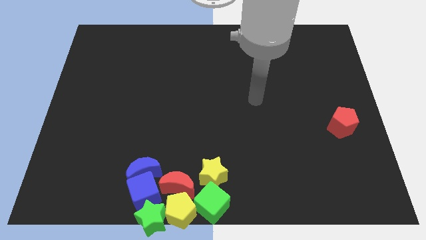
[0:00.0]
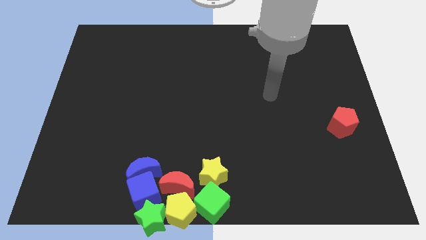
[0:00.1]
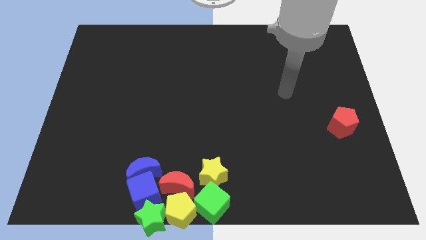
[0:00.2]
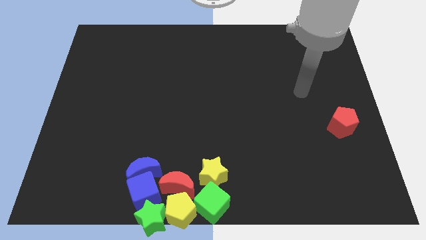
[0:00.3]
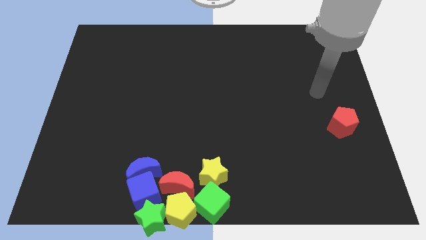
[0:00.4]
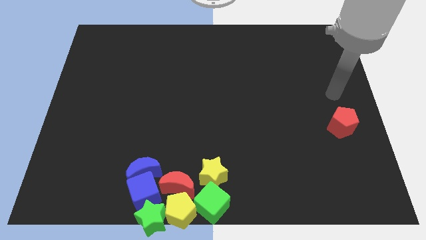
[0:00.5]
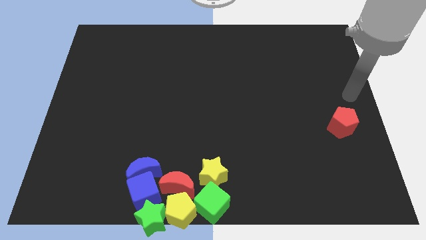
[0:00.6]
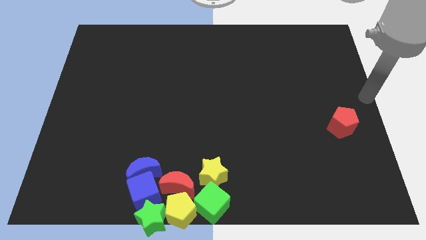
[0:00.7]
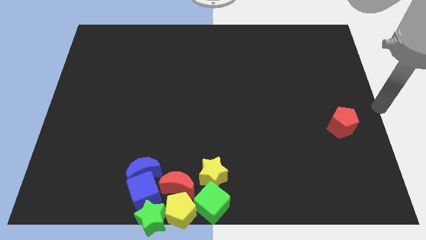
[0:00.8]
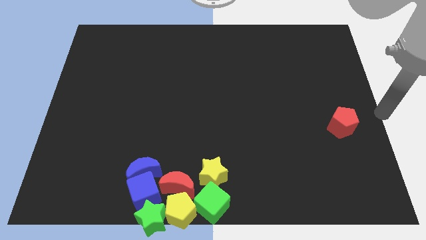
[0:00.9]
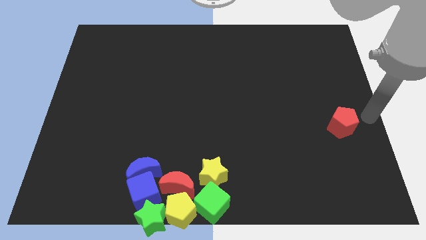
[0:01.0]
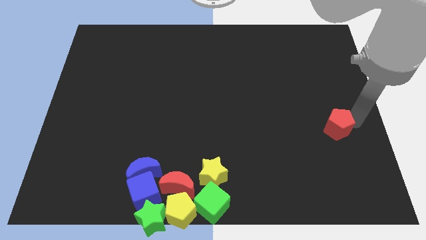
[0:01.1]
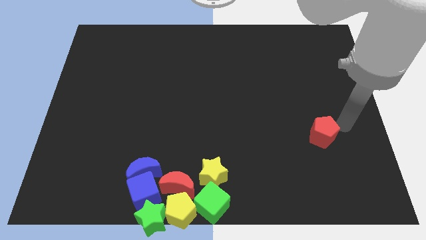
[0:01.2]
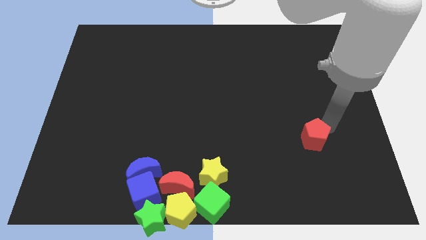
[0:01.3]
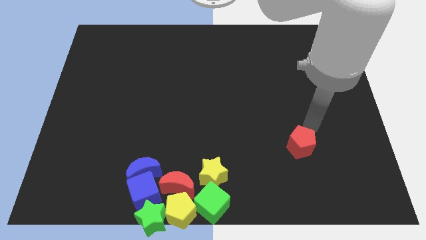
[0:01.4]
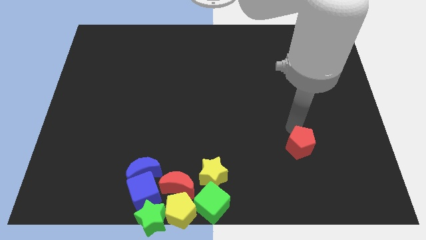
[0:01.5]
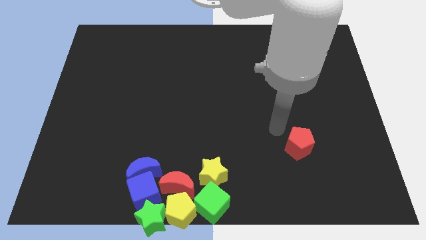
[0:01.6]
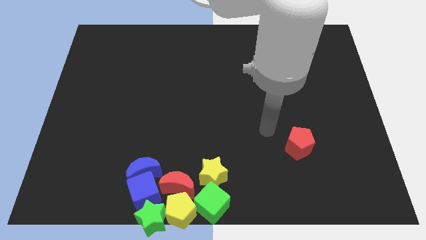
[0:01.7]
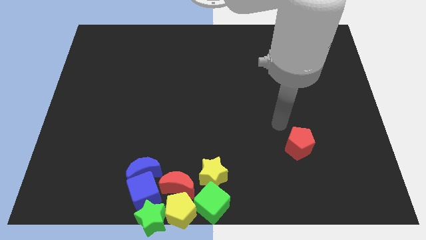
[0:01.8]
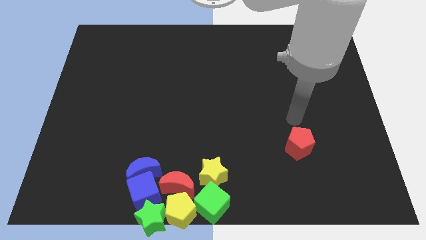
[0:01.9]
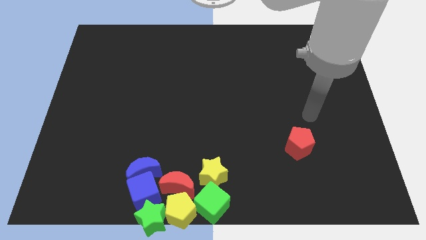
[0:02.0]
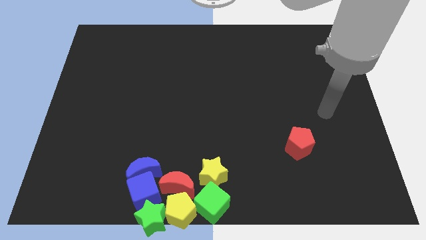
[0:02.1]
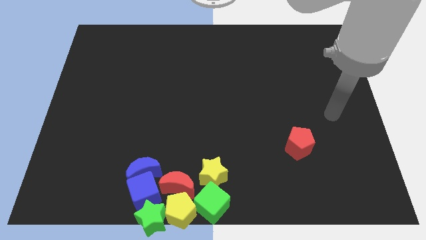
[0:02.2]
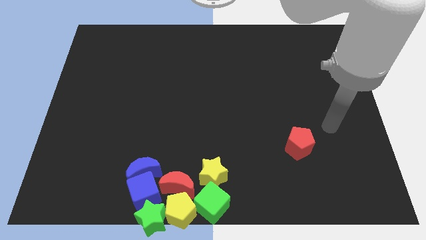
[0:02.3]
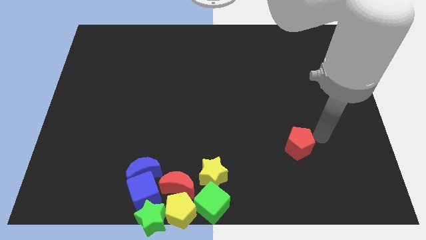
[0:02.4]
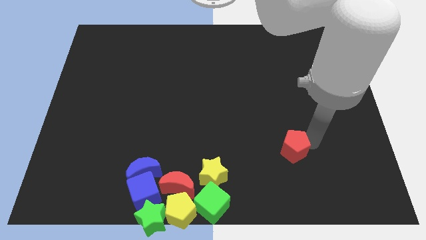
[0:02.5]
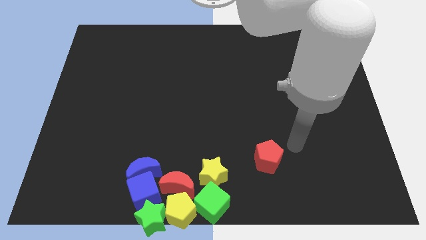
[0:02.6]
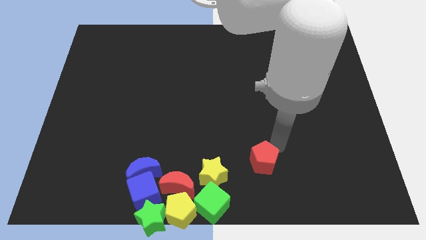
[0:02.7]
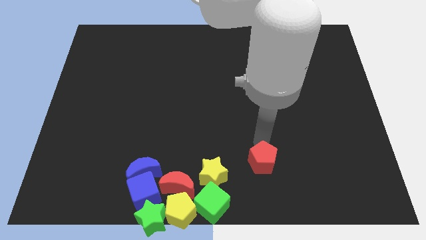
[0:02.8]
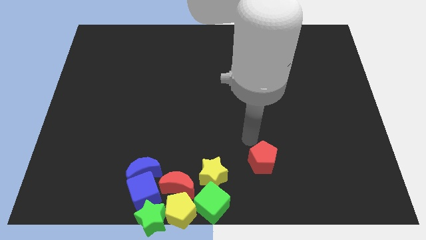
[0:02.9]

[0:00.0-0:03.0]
move the red pentagon towards the yellow star

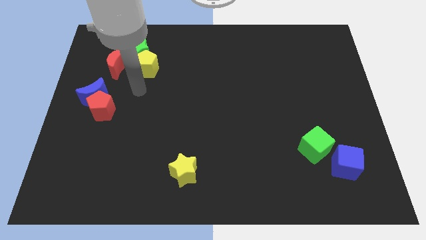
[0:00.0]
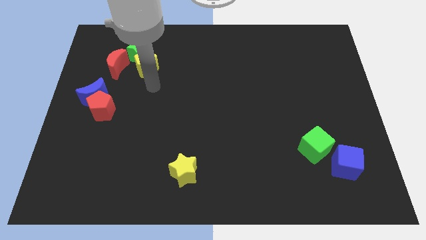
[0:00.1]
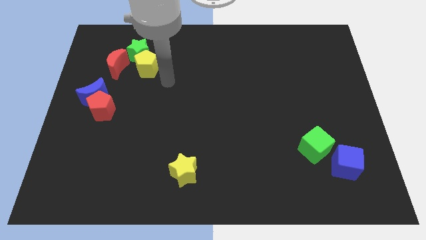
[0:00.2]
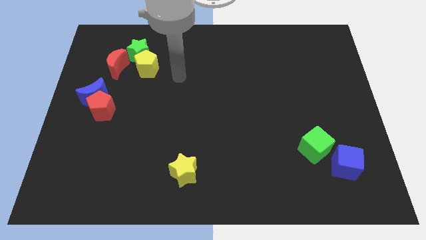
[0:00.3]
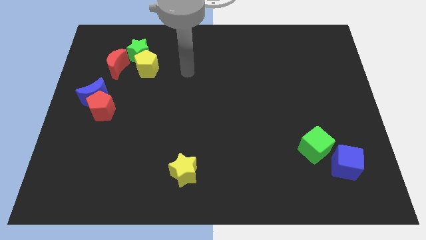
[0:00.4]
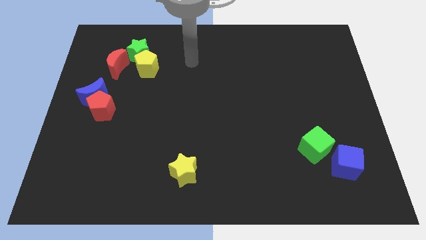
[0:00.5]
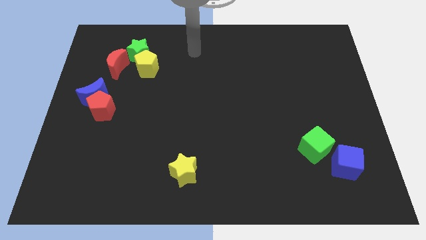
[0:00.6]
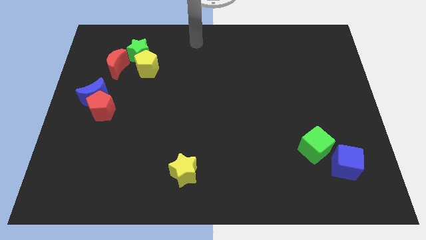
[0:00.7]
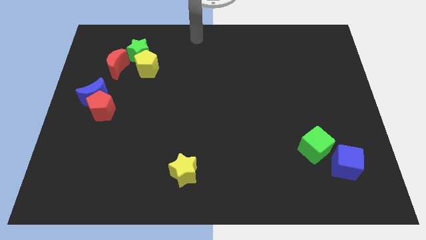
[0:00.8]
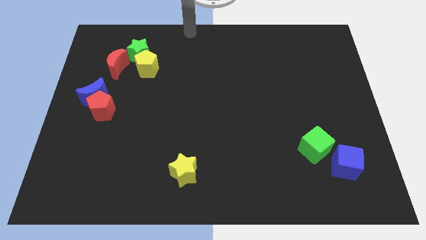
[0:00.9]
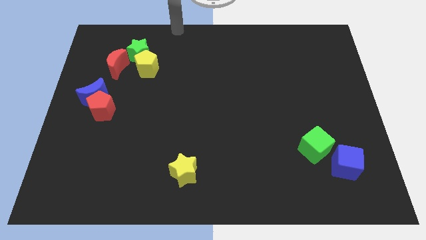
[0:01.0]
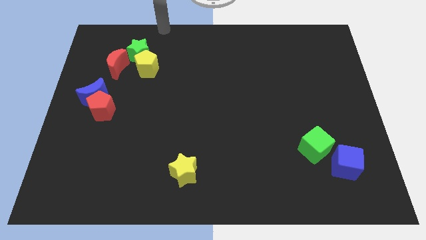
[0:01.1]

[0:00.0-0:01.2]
move your arm towards the top side of the board

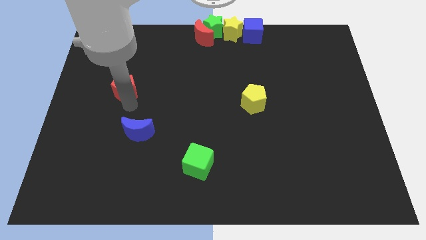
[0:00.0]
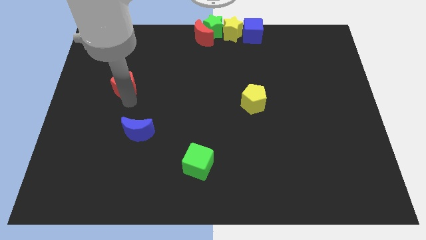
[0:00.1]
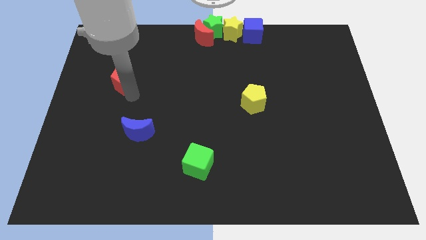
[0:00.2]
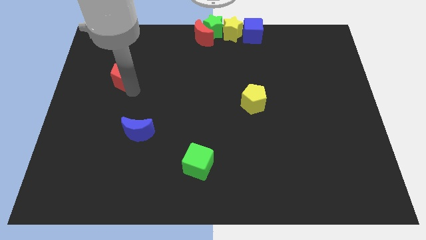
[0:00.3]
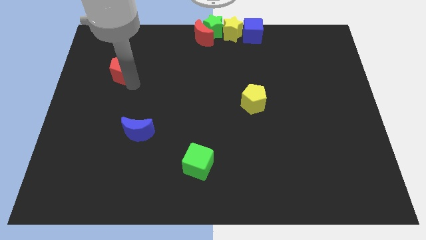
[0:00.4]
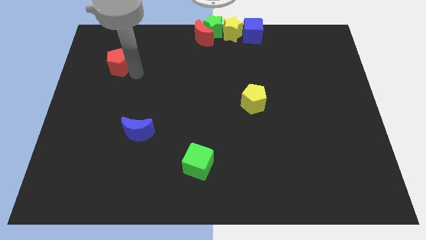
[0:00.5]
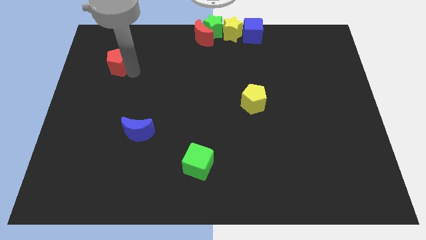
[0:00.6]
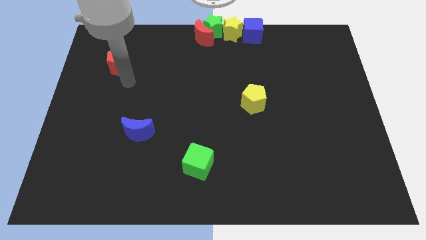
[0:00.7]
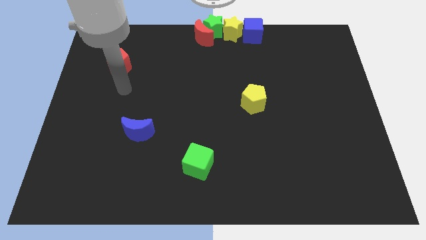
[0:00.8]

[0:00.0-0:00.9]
separate red pentagon from blue crescent

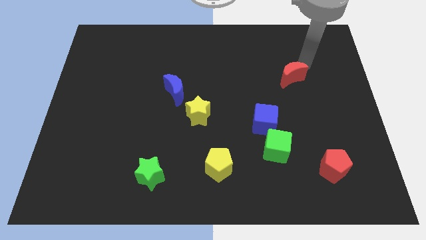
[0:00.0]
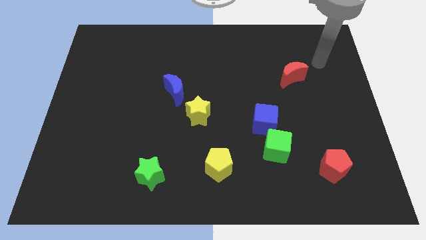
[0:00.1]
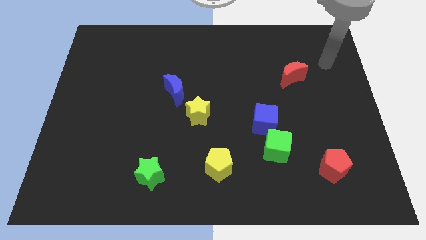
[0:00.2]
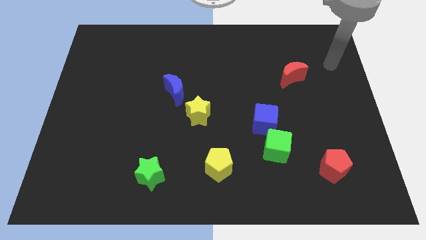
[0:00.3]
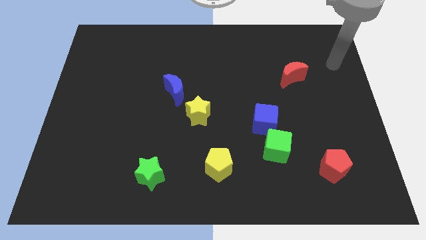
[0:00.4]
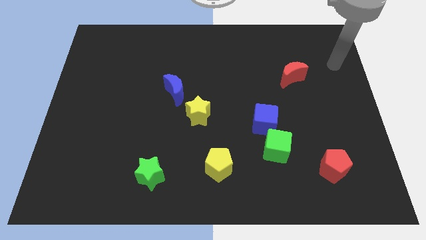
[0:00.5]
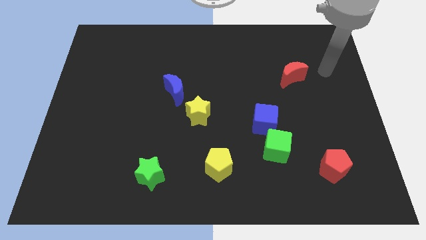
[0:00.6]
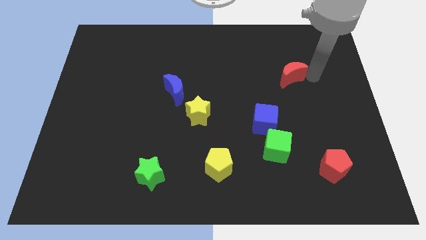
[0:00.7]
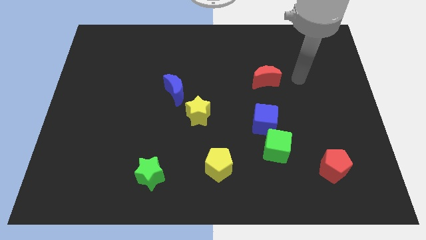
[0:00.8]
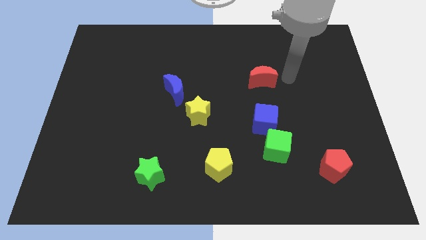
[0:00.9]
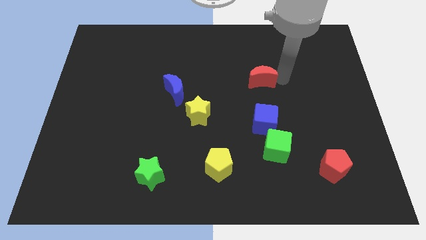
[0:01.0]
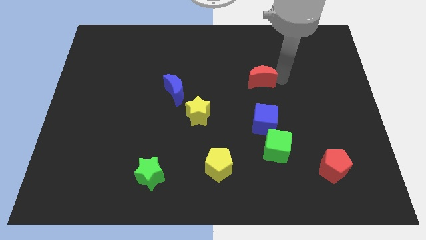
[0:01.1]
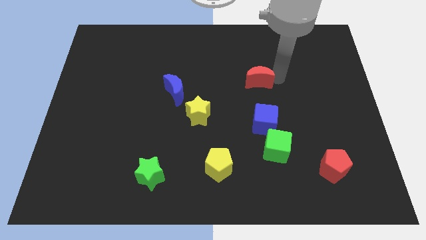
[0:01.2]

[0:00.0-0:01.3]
place the red moon above the blue cube

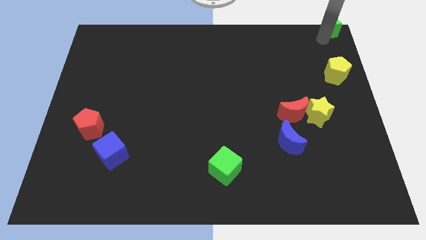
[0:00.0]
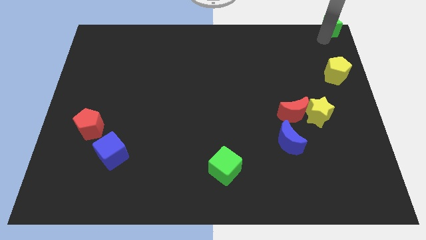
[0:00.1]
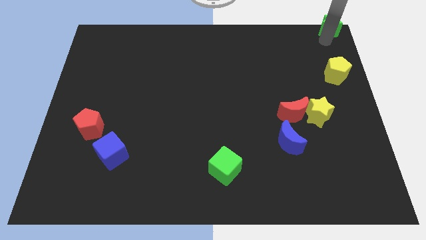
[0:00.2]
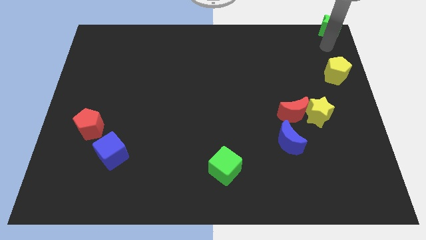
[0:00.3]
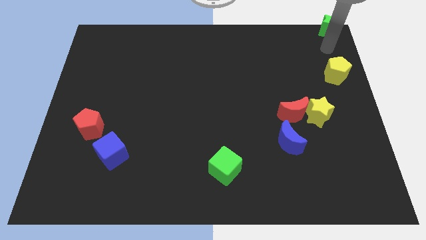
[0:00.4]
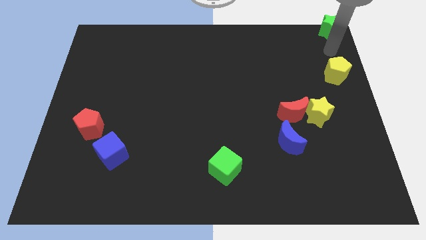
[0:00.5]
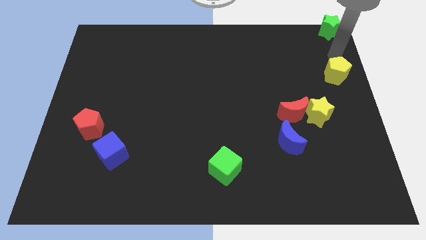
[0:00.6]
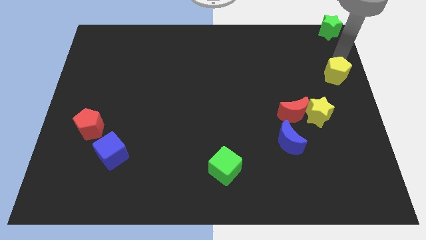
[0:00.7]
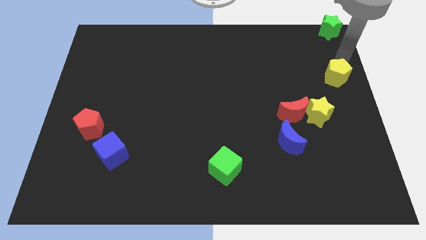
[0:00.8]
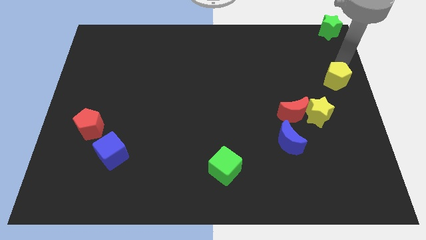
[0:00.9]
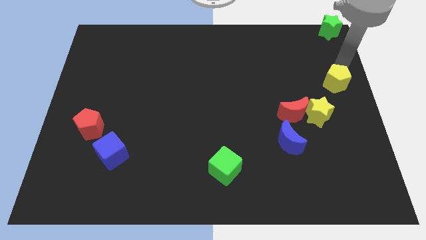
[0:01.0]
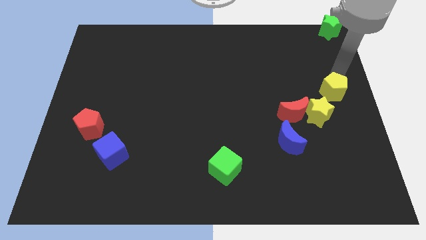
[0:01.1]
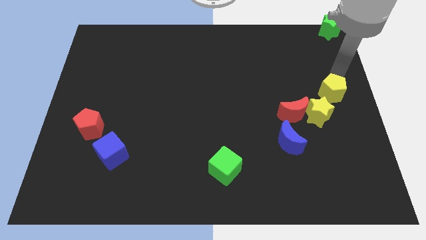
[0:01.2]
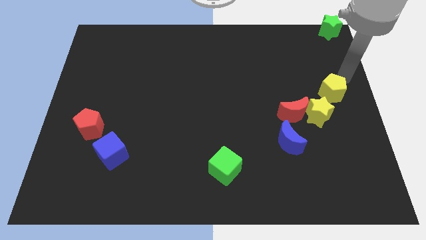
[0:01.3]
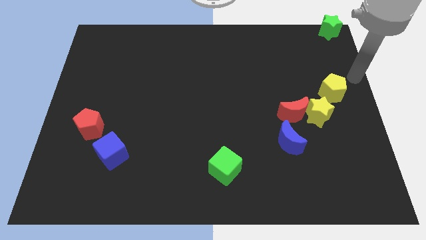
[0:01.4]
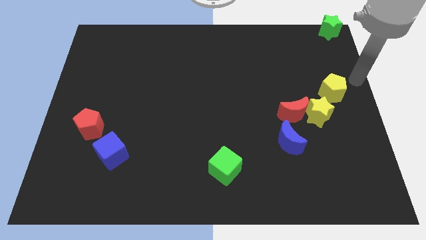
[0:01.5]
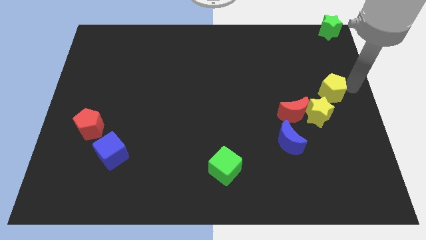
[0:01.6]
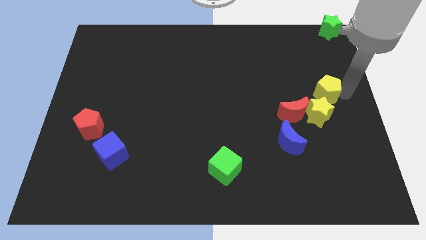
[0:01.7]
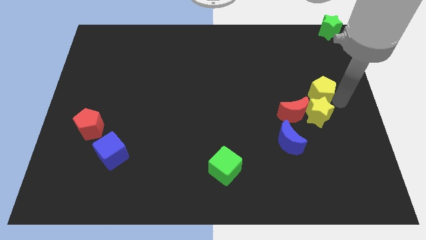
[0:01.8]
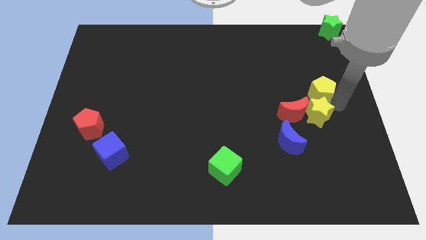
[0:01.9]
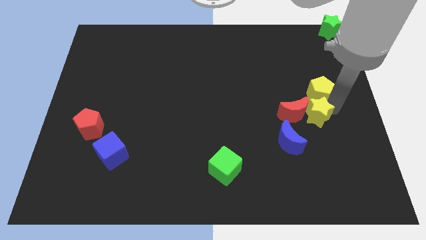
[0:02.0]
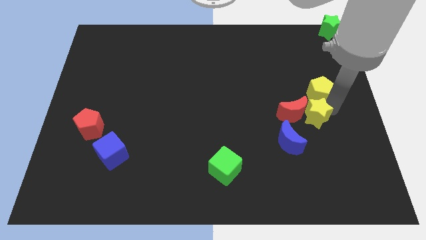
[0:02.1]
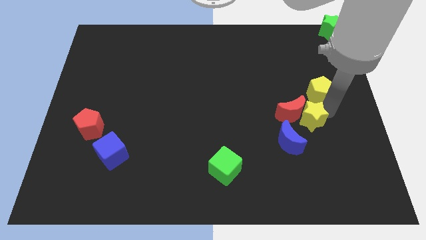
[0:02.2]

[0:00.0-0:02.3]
move the yellow pentagon on top of the yellow star

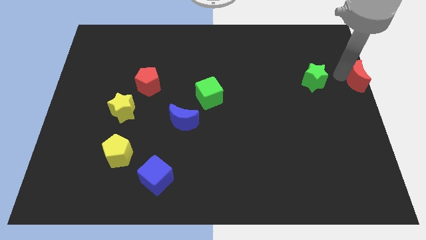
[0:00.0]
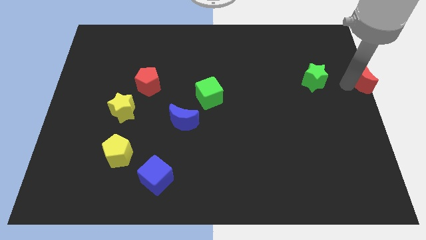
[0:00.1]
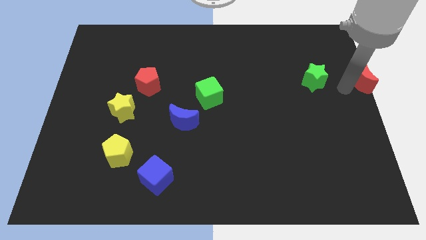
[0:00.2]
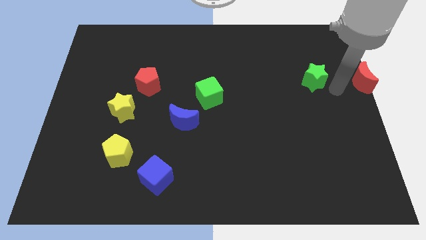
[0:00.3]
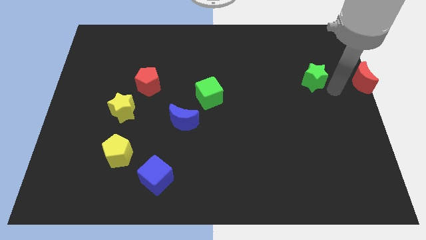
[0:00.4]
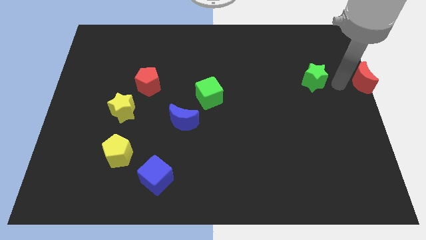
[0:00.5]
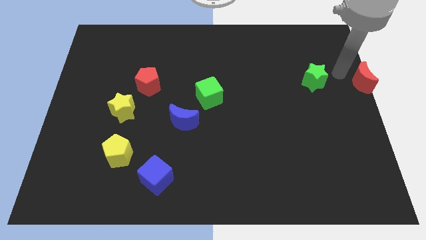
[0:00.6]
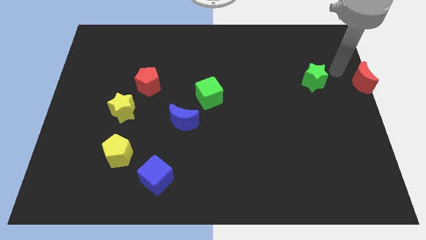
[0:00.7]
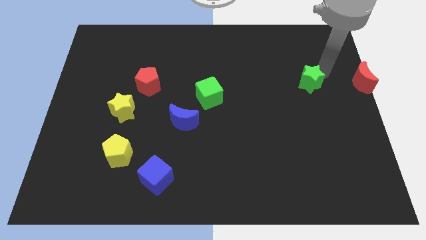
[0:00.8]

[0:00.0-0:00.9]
move green green star slightly right
